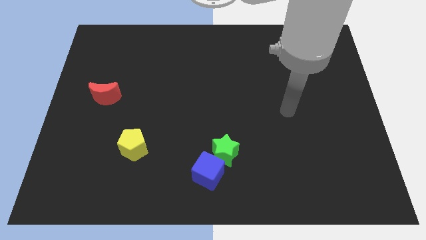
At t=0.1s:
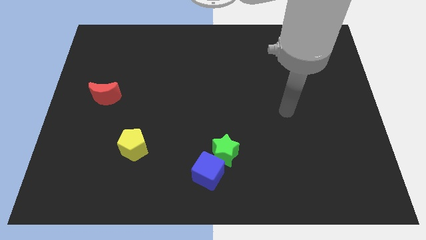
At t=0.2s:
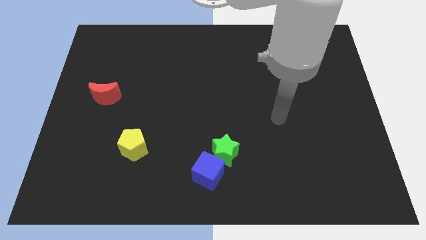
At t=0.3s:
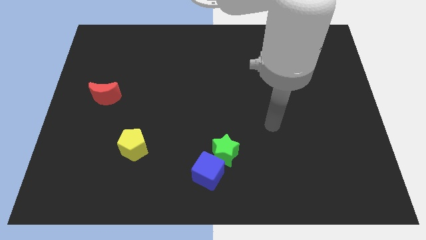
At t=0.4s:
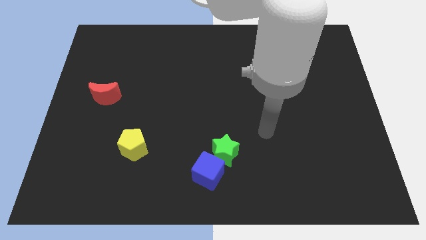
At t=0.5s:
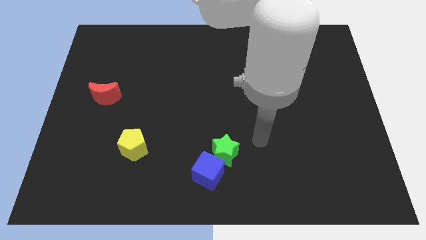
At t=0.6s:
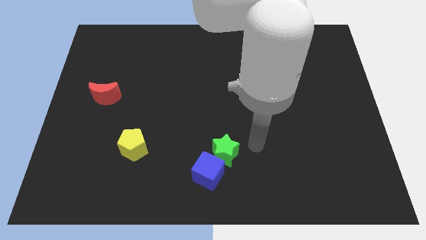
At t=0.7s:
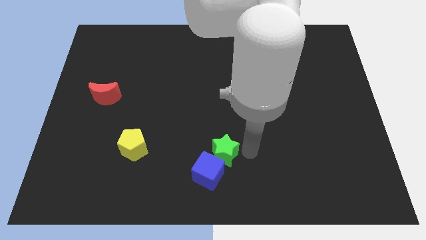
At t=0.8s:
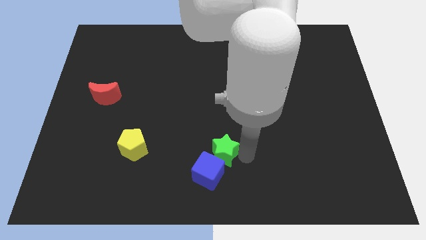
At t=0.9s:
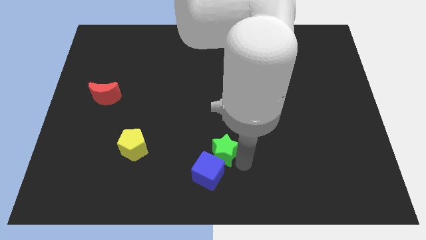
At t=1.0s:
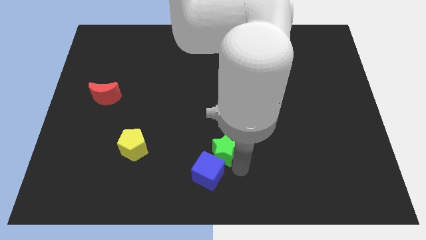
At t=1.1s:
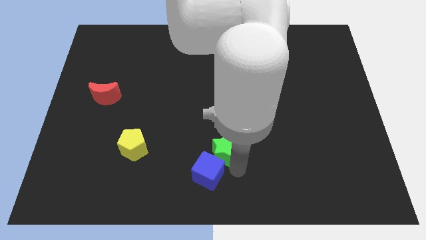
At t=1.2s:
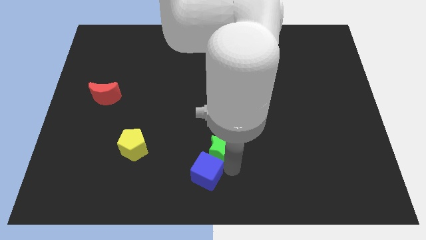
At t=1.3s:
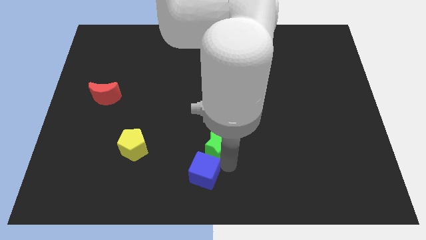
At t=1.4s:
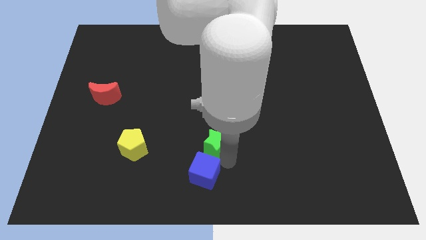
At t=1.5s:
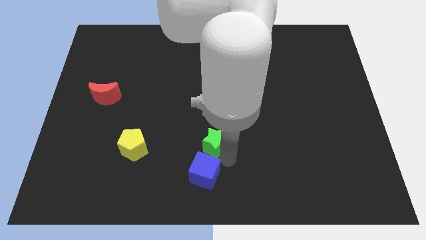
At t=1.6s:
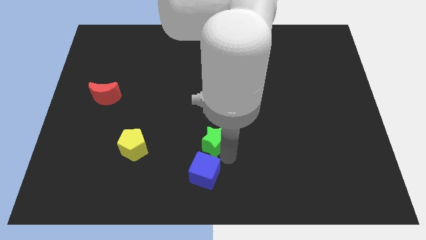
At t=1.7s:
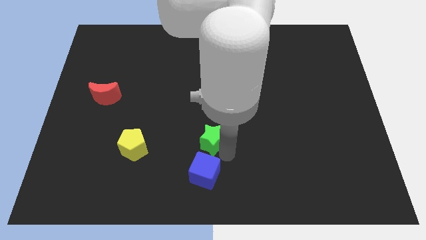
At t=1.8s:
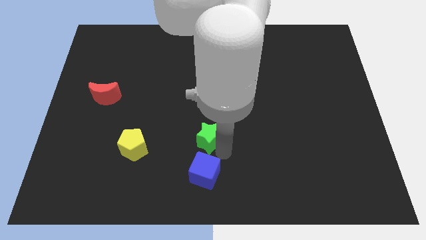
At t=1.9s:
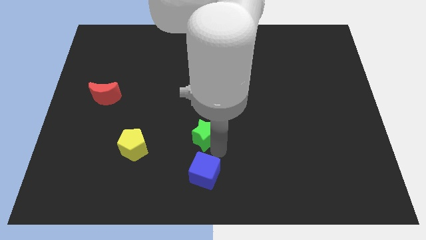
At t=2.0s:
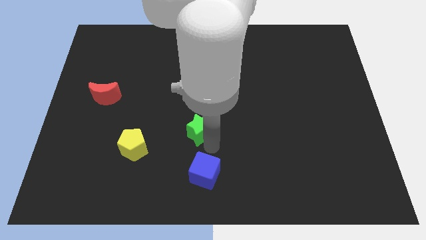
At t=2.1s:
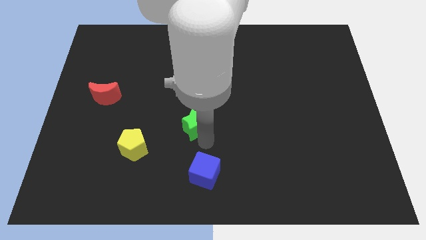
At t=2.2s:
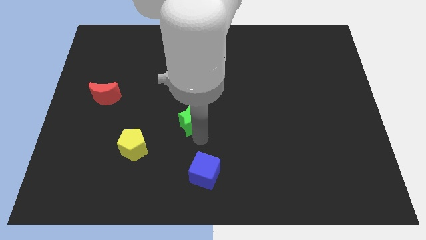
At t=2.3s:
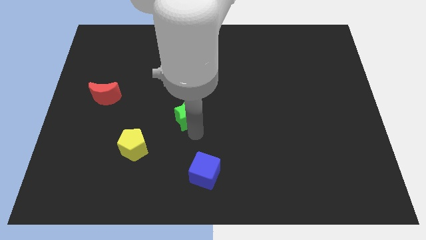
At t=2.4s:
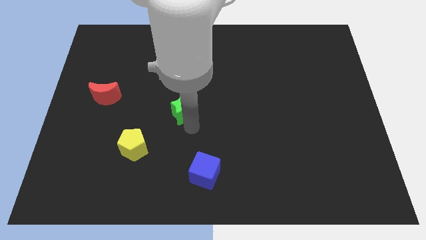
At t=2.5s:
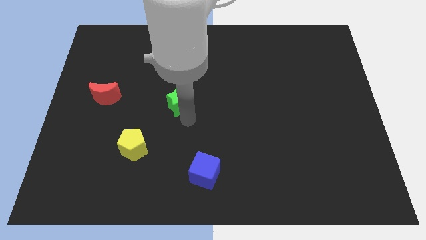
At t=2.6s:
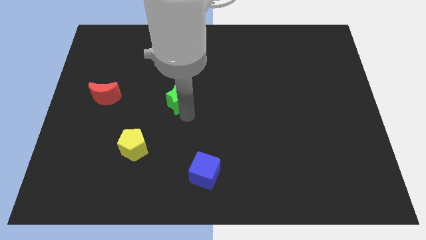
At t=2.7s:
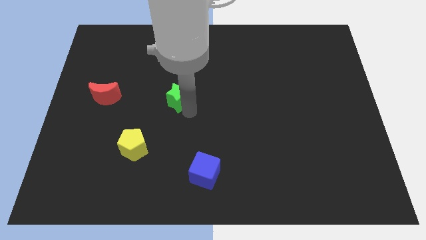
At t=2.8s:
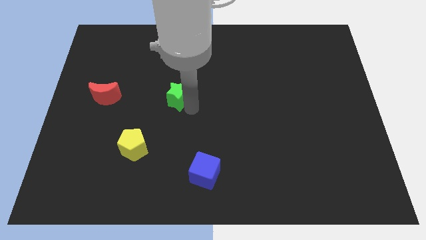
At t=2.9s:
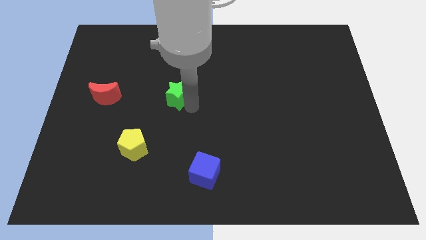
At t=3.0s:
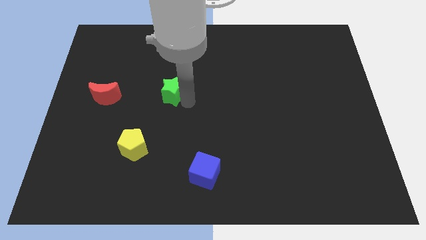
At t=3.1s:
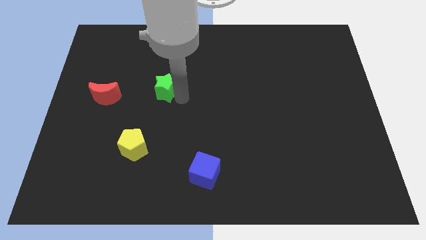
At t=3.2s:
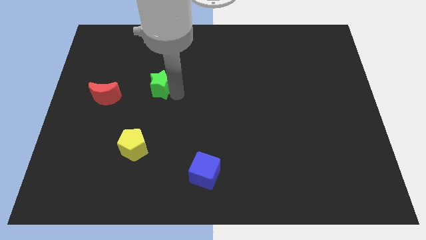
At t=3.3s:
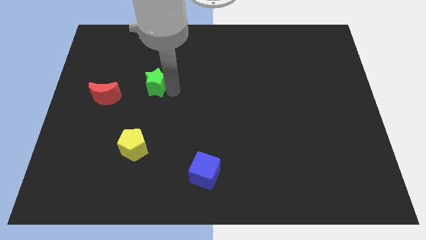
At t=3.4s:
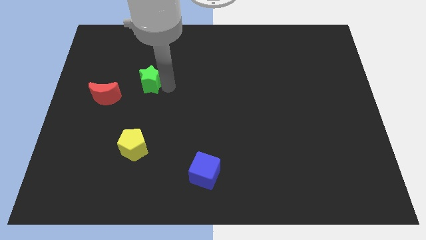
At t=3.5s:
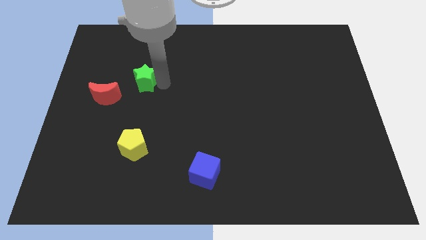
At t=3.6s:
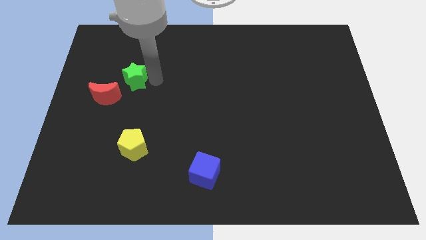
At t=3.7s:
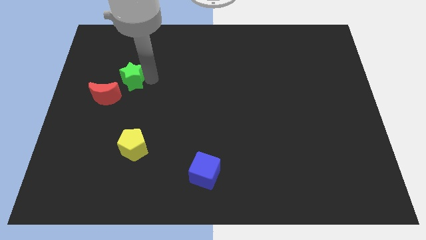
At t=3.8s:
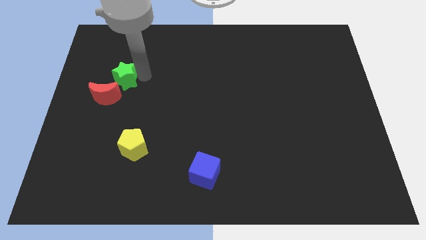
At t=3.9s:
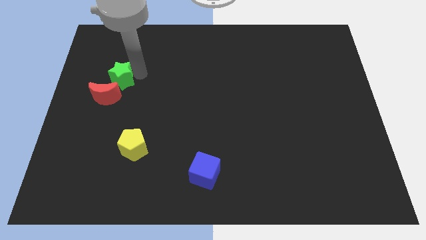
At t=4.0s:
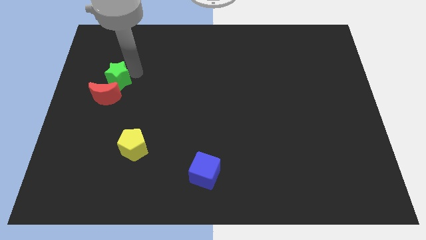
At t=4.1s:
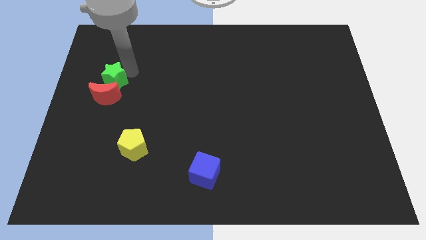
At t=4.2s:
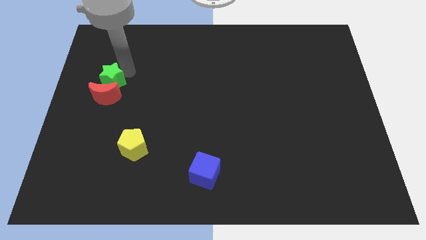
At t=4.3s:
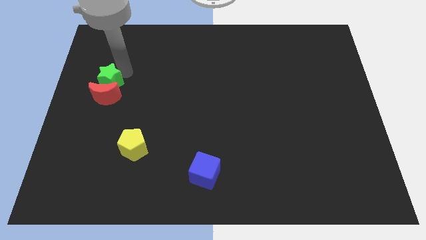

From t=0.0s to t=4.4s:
push the green star close to the red block

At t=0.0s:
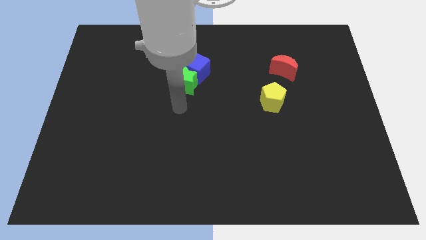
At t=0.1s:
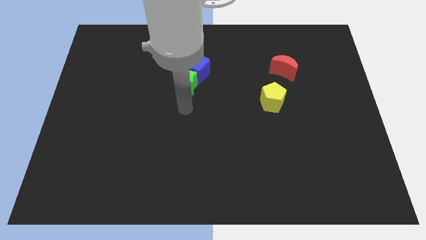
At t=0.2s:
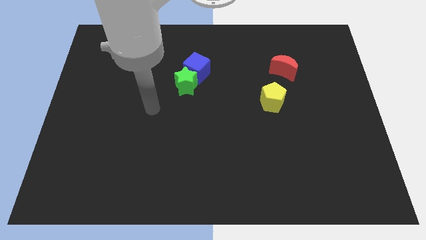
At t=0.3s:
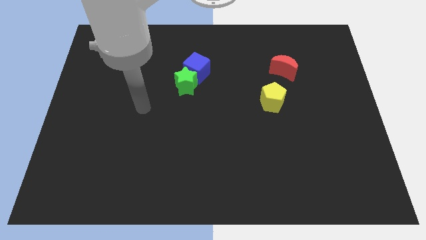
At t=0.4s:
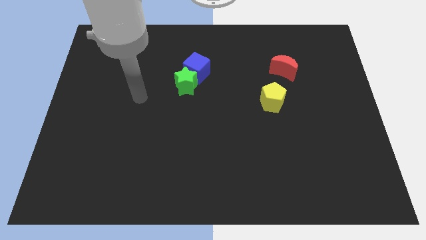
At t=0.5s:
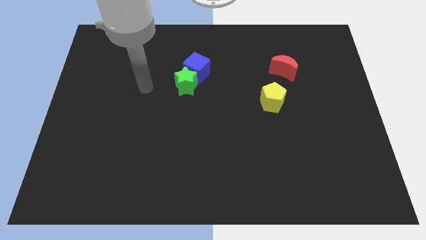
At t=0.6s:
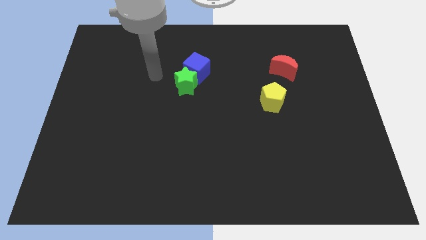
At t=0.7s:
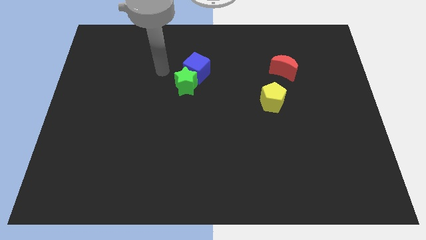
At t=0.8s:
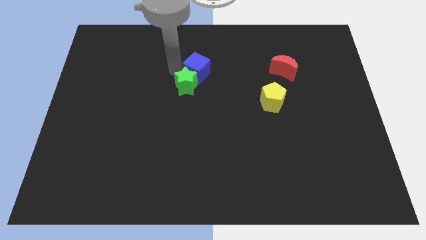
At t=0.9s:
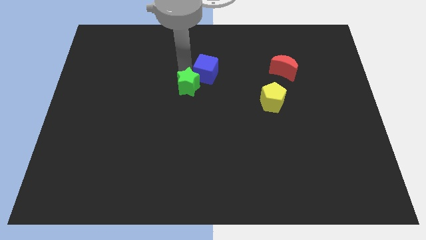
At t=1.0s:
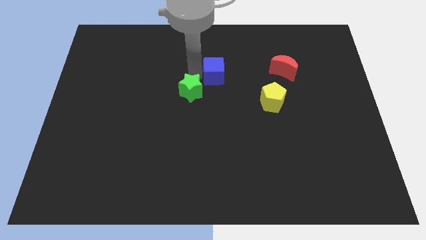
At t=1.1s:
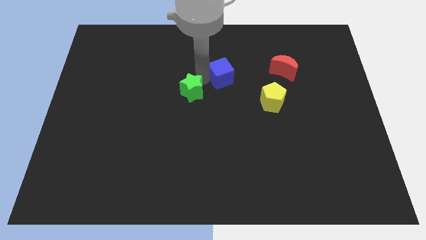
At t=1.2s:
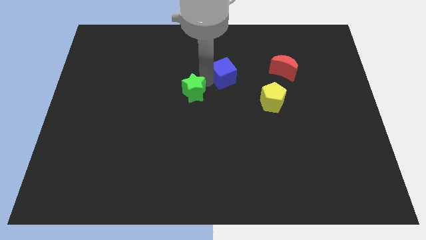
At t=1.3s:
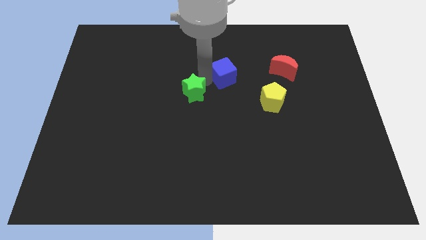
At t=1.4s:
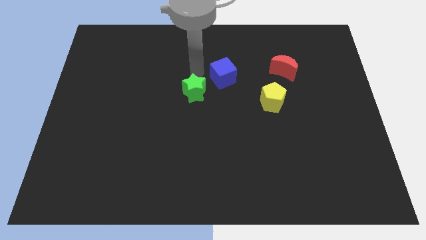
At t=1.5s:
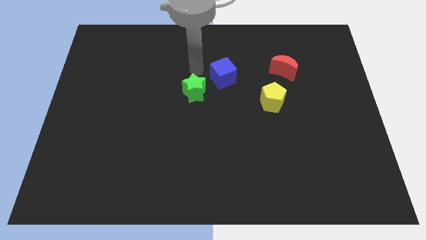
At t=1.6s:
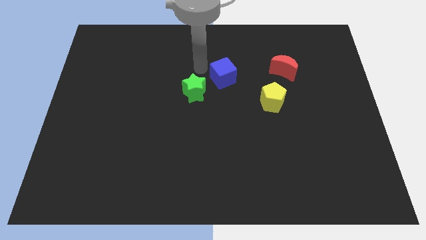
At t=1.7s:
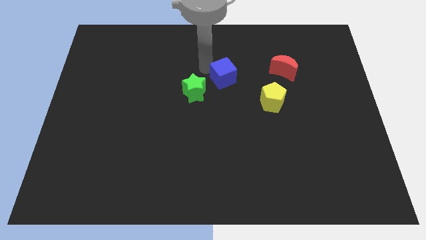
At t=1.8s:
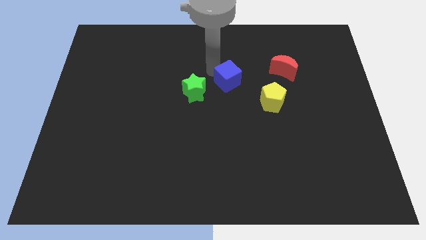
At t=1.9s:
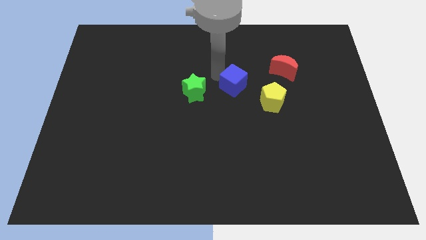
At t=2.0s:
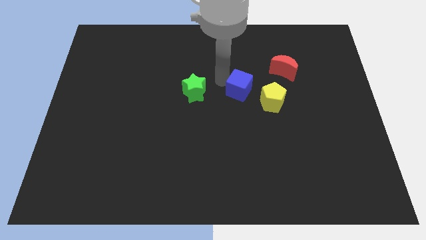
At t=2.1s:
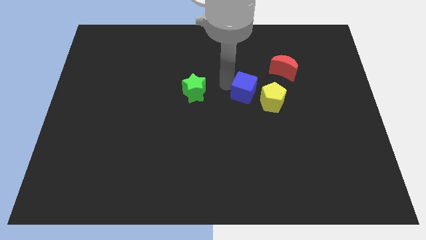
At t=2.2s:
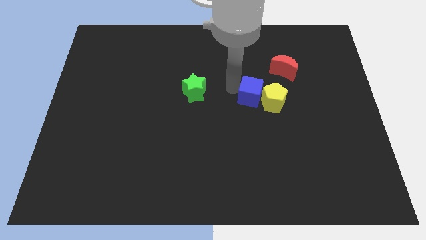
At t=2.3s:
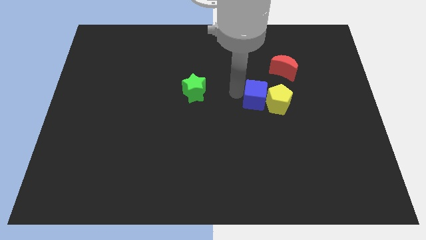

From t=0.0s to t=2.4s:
put the blue cube close to the yellow block

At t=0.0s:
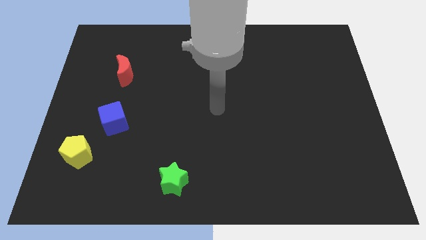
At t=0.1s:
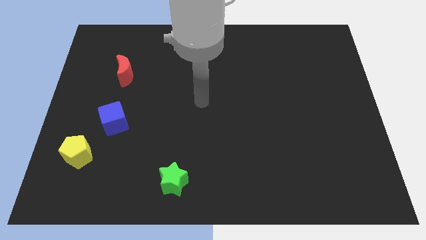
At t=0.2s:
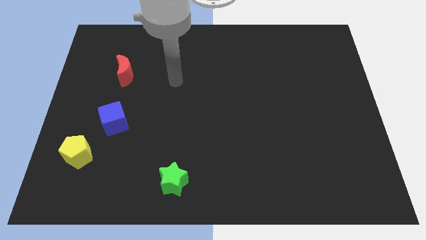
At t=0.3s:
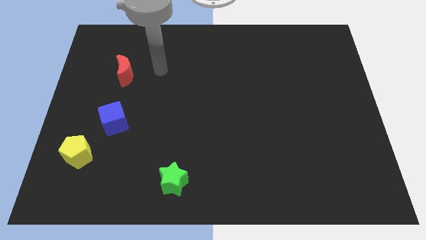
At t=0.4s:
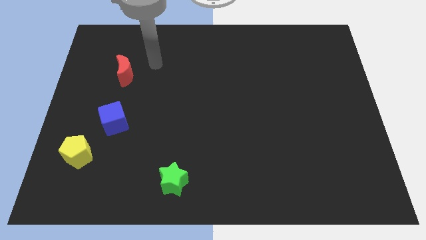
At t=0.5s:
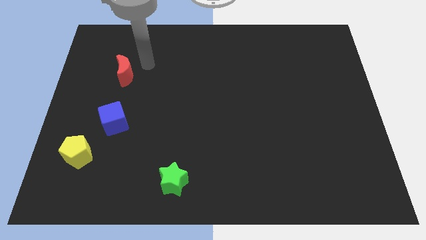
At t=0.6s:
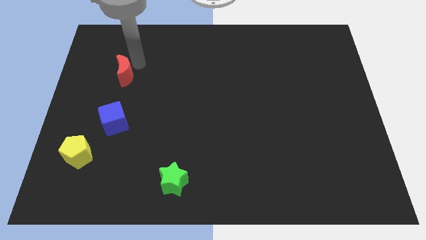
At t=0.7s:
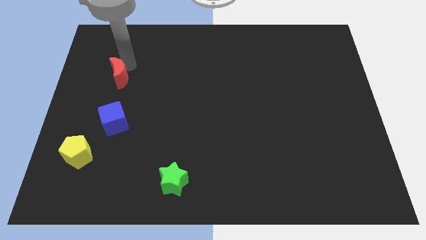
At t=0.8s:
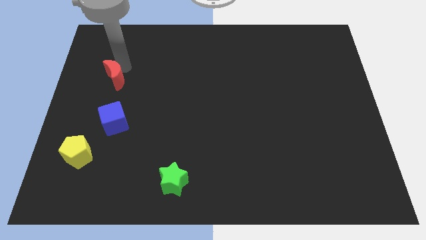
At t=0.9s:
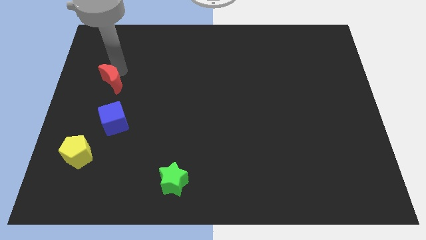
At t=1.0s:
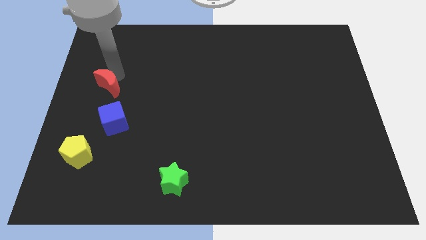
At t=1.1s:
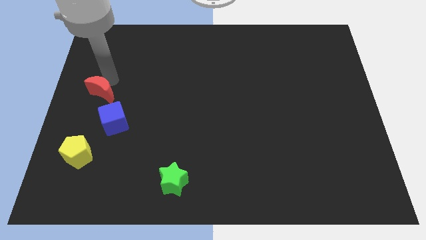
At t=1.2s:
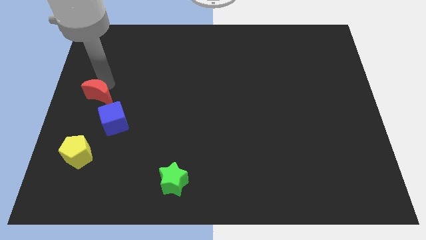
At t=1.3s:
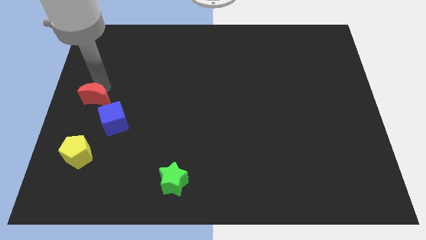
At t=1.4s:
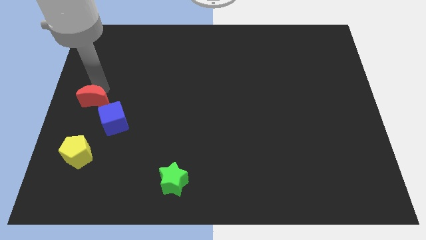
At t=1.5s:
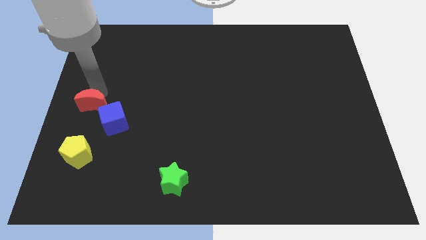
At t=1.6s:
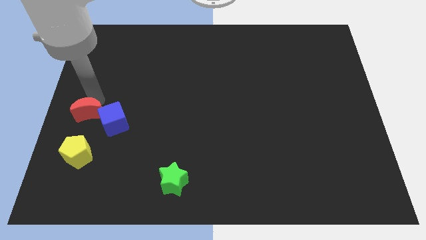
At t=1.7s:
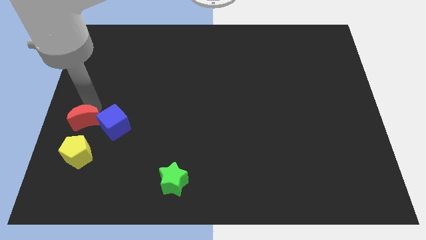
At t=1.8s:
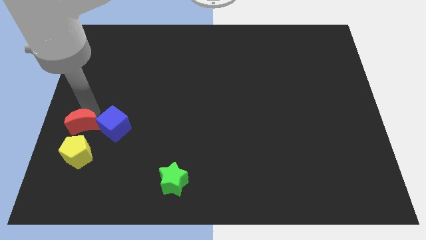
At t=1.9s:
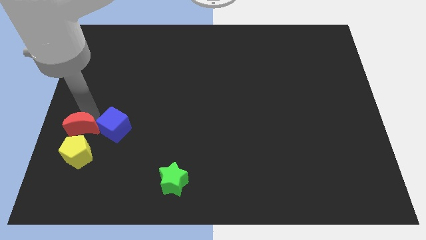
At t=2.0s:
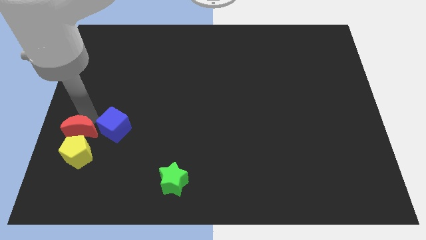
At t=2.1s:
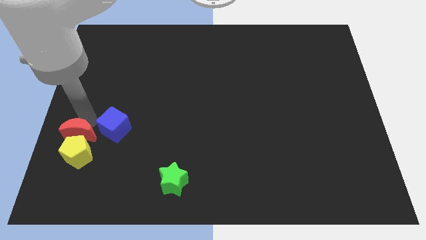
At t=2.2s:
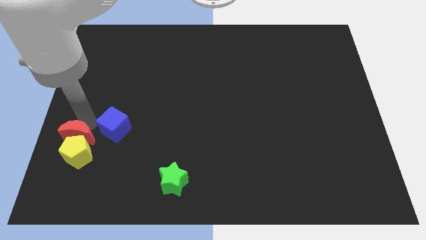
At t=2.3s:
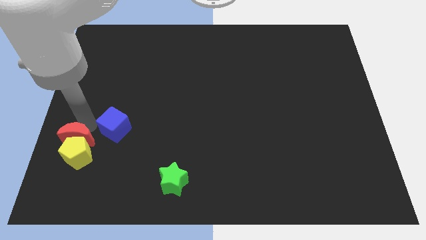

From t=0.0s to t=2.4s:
push the red block close to the pentagon
